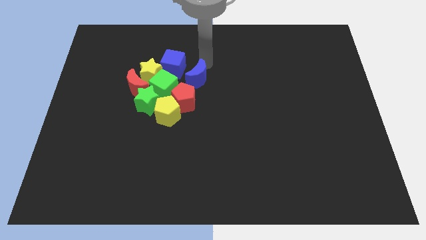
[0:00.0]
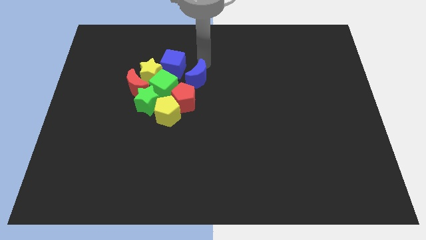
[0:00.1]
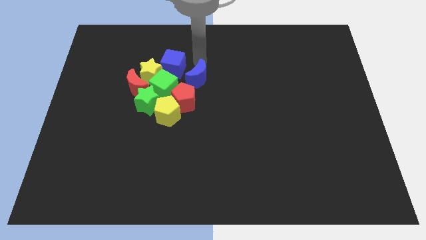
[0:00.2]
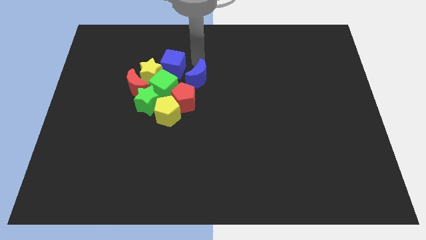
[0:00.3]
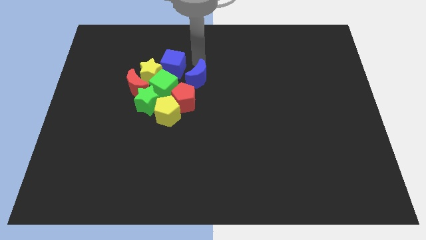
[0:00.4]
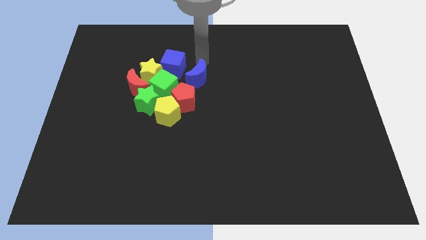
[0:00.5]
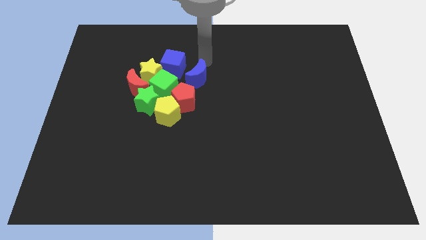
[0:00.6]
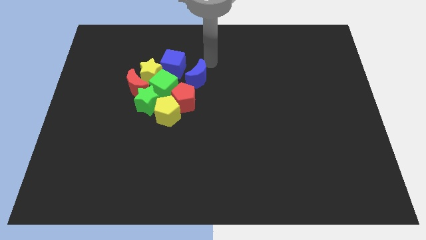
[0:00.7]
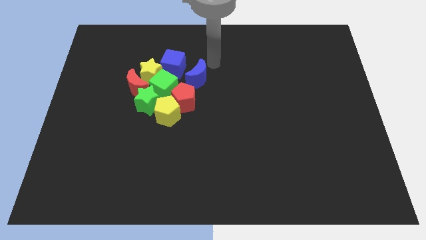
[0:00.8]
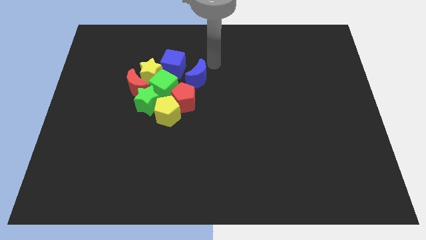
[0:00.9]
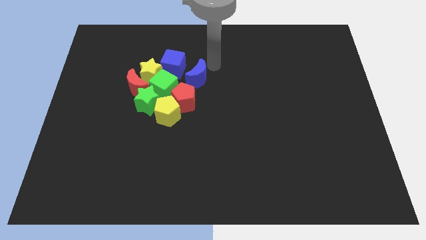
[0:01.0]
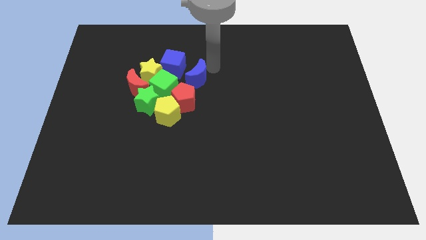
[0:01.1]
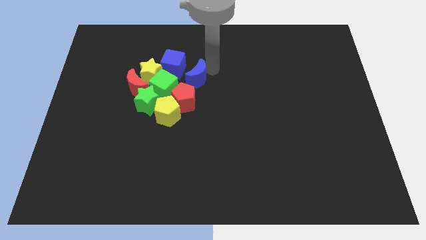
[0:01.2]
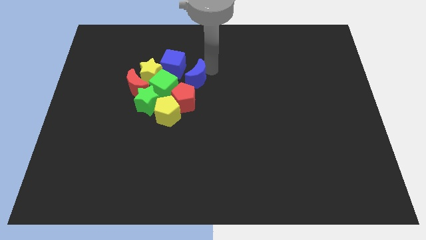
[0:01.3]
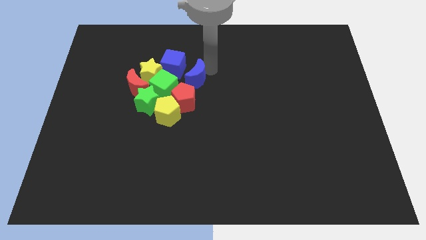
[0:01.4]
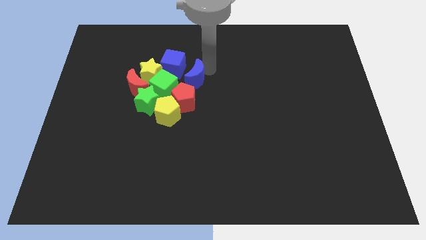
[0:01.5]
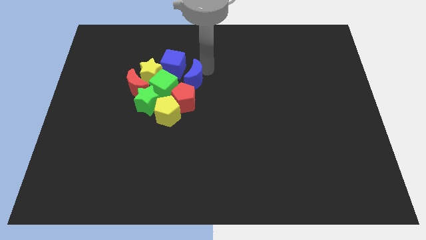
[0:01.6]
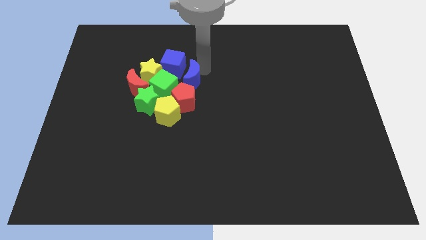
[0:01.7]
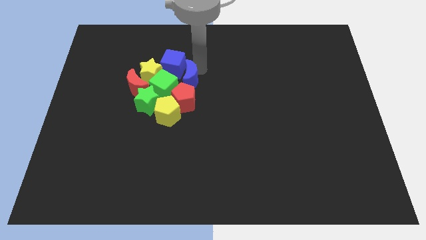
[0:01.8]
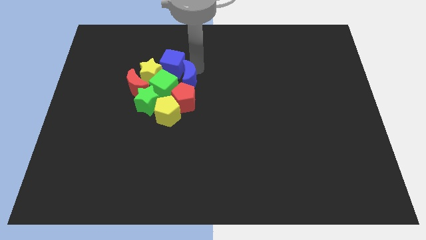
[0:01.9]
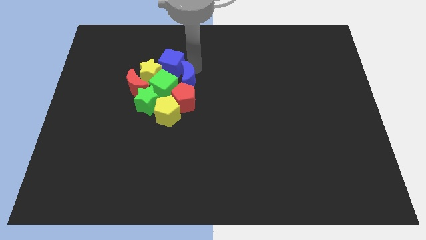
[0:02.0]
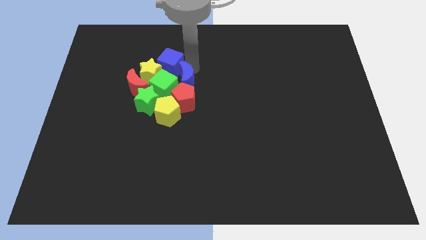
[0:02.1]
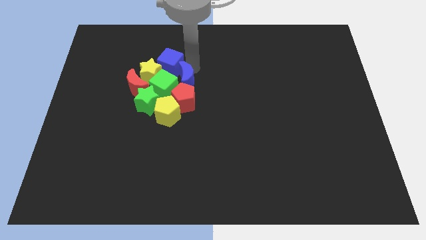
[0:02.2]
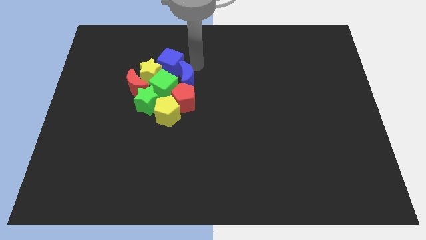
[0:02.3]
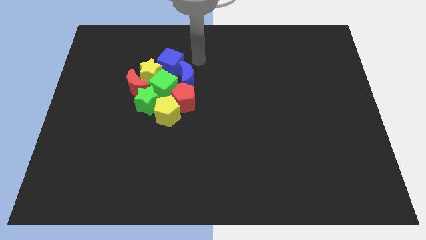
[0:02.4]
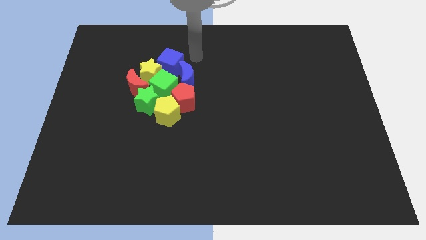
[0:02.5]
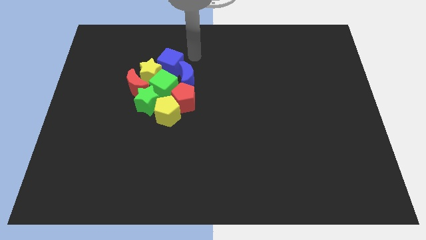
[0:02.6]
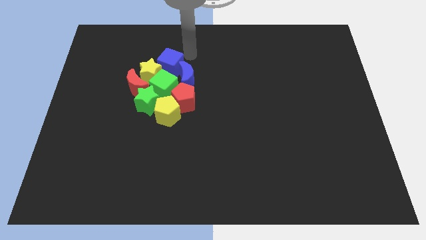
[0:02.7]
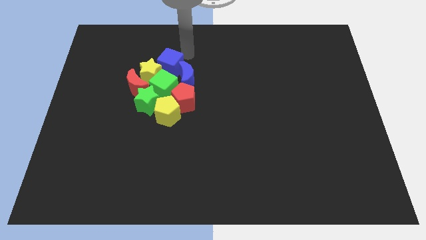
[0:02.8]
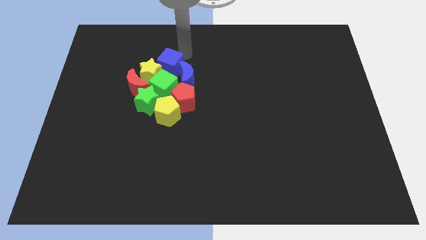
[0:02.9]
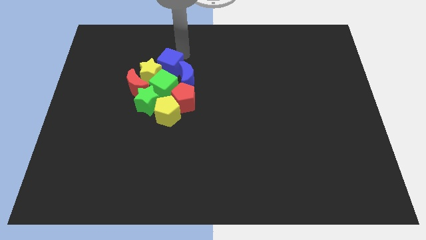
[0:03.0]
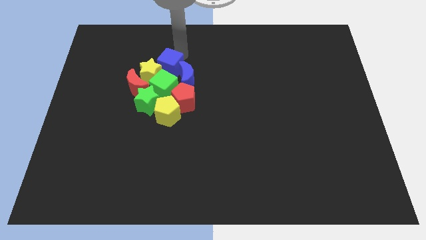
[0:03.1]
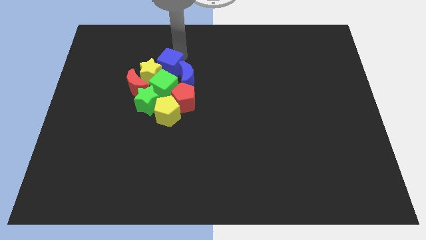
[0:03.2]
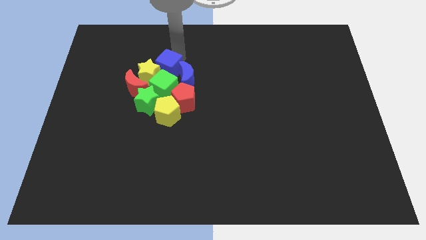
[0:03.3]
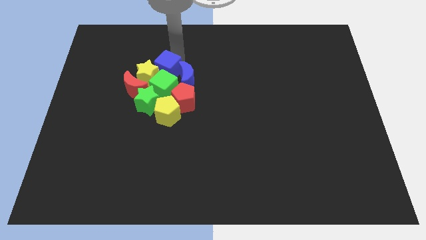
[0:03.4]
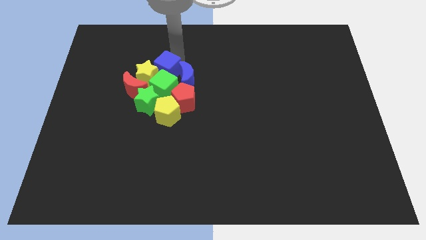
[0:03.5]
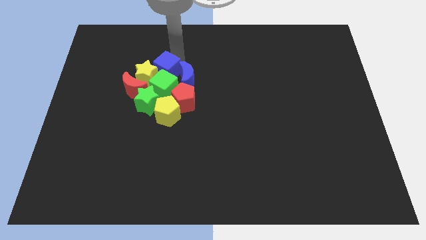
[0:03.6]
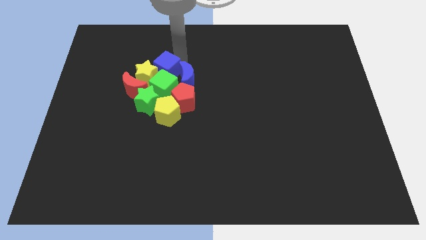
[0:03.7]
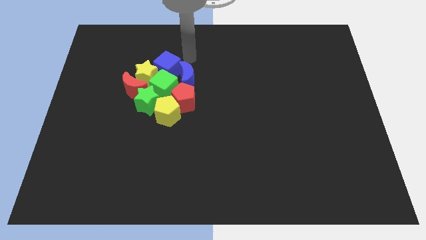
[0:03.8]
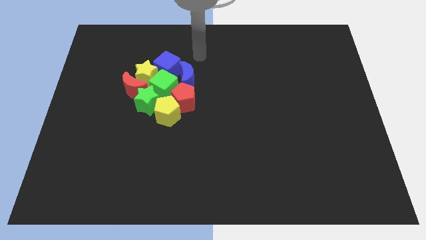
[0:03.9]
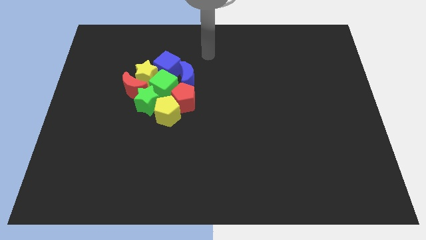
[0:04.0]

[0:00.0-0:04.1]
move blue crescent right to blue cube

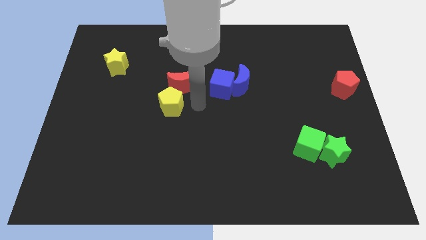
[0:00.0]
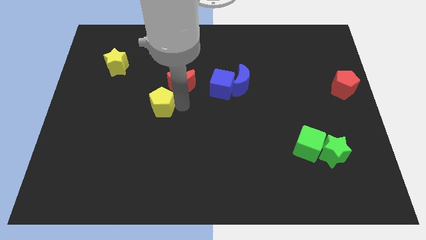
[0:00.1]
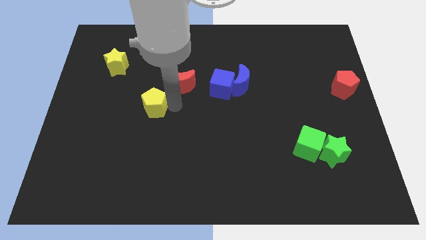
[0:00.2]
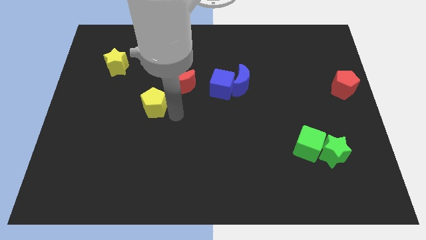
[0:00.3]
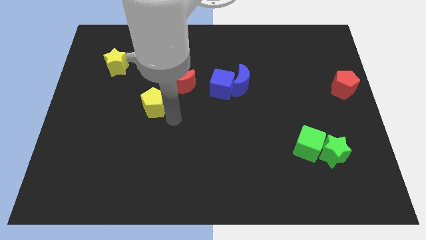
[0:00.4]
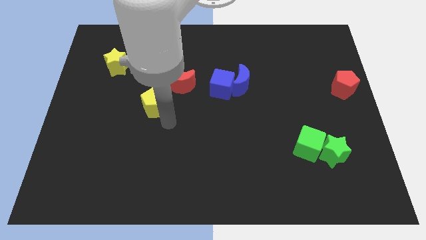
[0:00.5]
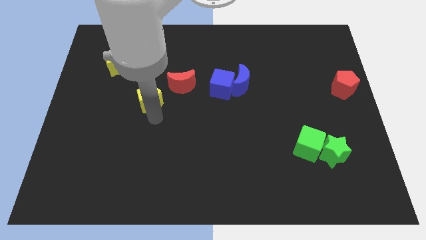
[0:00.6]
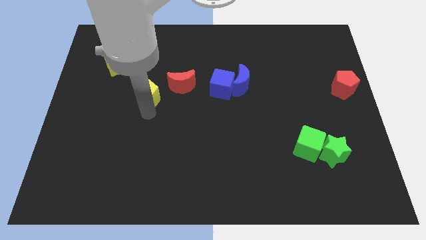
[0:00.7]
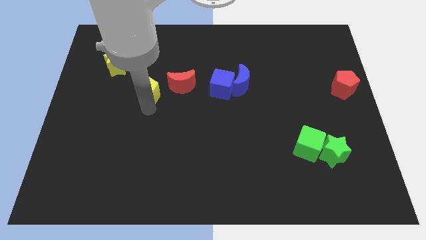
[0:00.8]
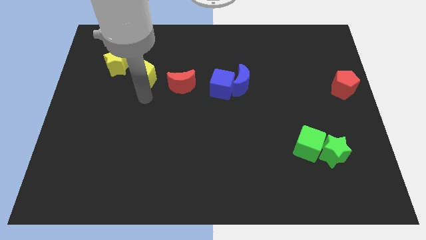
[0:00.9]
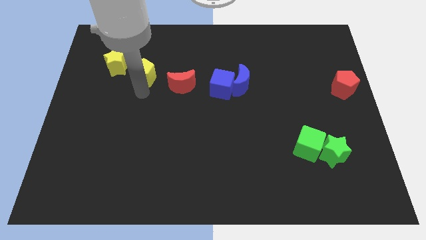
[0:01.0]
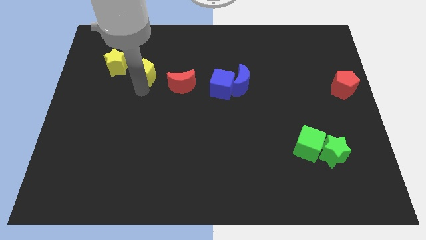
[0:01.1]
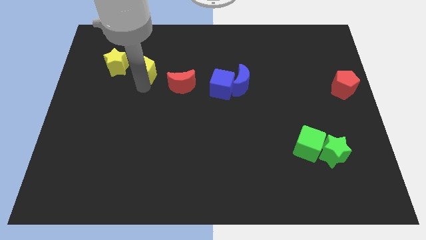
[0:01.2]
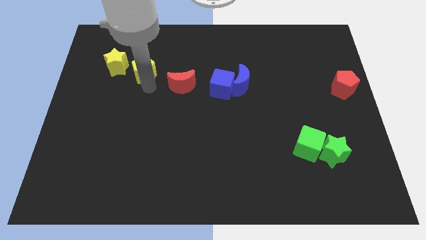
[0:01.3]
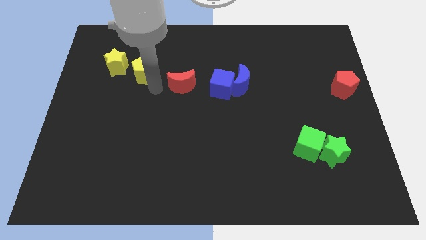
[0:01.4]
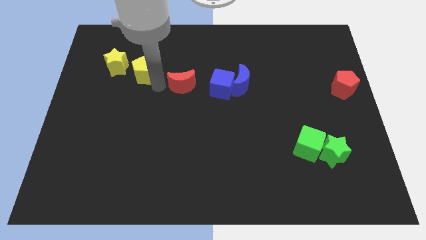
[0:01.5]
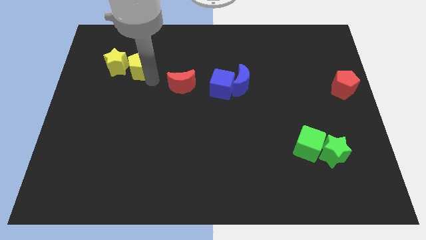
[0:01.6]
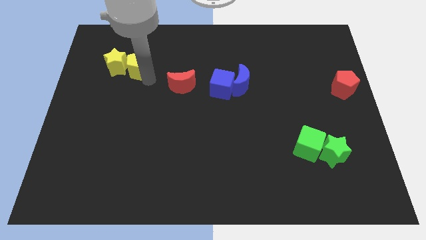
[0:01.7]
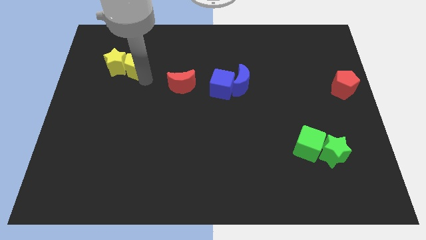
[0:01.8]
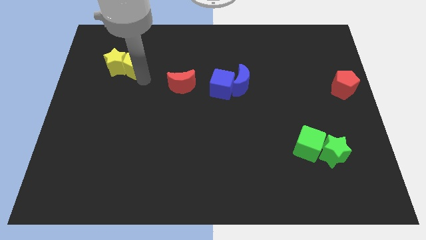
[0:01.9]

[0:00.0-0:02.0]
move the yellow pentagon to the right side of yellow star

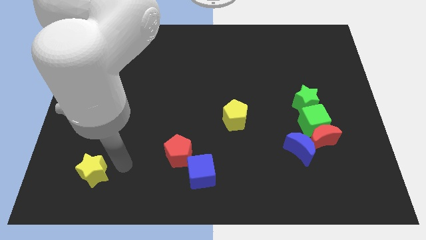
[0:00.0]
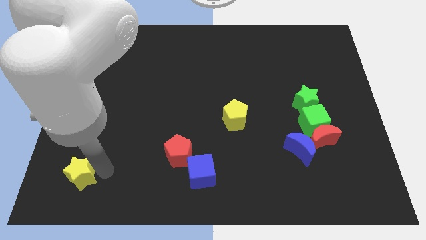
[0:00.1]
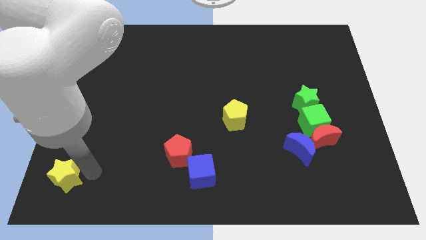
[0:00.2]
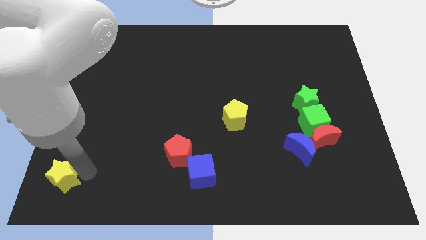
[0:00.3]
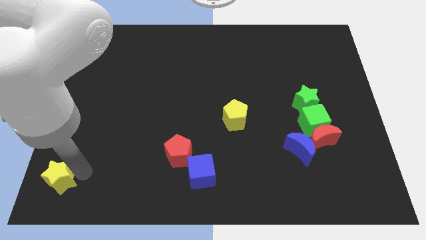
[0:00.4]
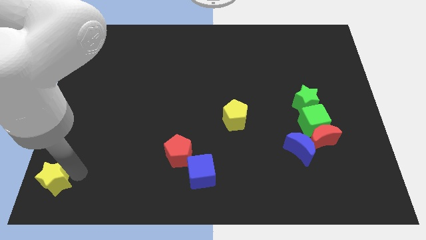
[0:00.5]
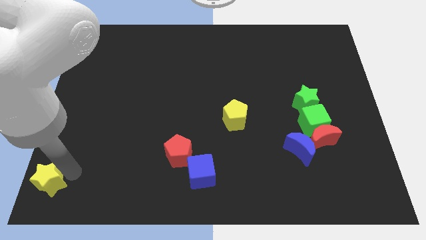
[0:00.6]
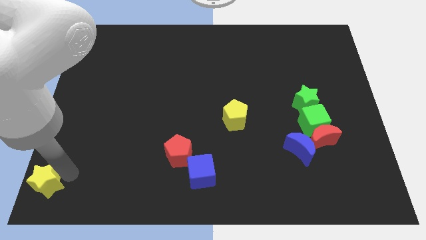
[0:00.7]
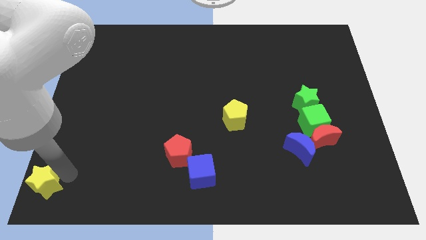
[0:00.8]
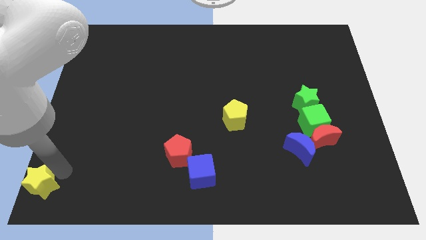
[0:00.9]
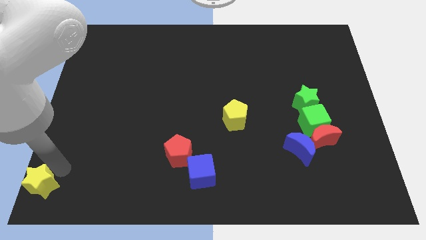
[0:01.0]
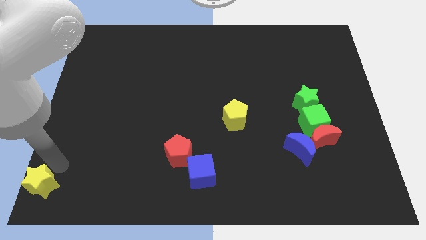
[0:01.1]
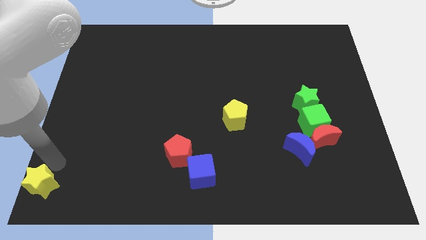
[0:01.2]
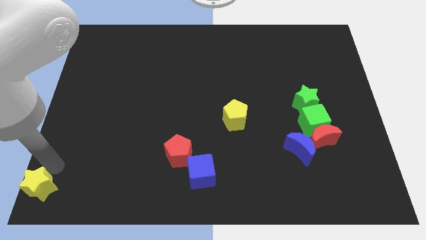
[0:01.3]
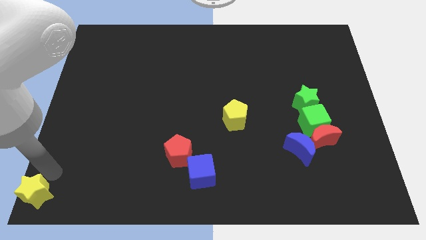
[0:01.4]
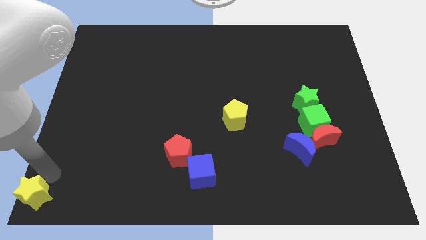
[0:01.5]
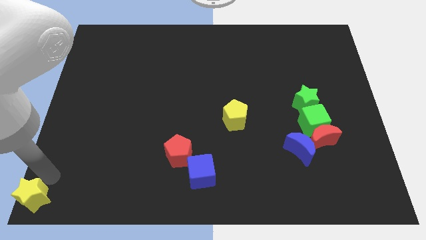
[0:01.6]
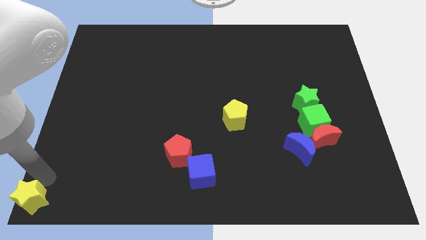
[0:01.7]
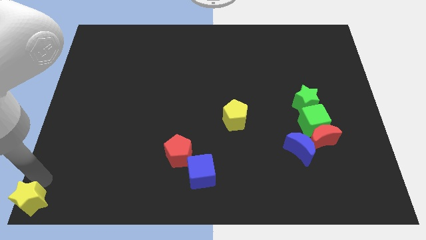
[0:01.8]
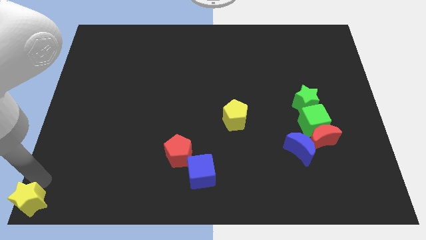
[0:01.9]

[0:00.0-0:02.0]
place the yellow star to the bottom left of the board

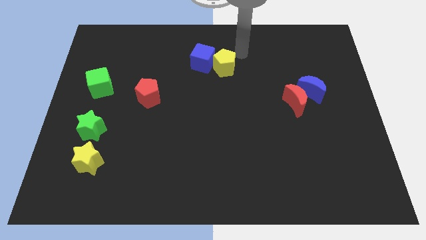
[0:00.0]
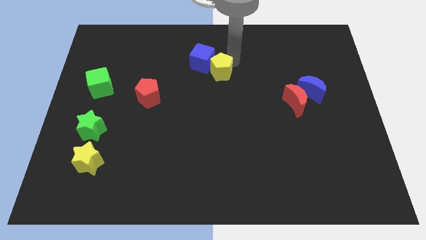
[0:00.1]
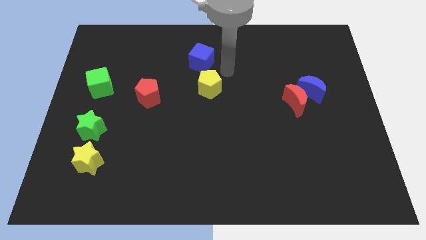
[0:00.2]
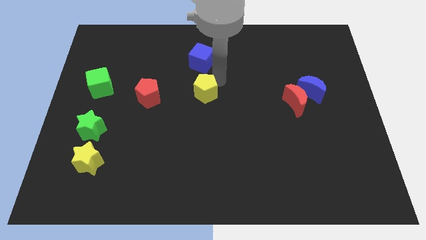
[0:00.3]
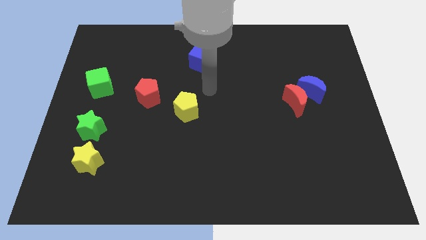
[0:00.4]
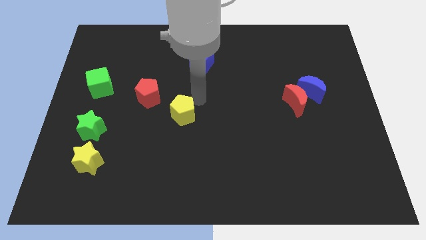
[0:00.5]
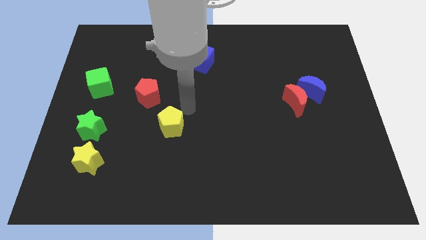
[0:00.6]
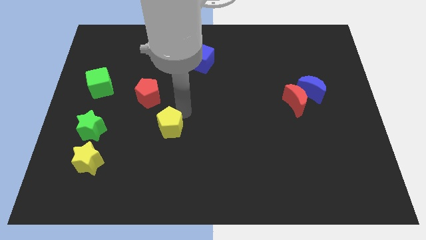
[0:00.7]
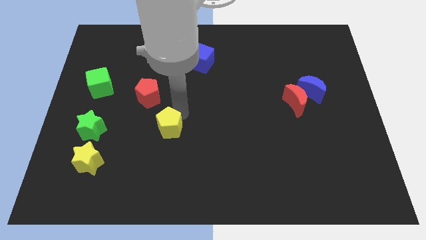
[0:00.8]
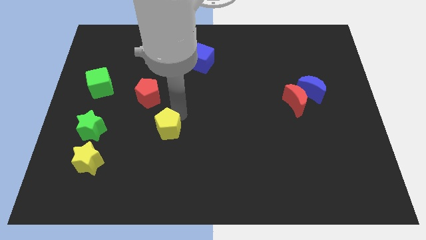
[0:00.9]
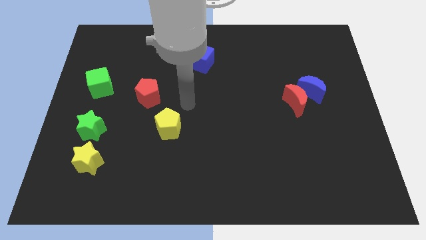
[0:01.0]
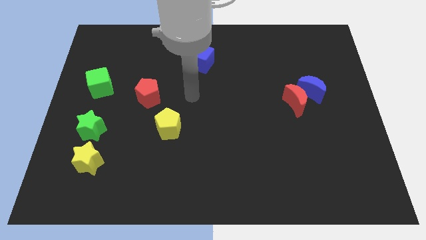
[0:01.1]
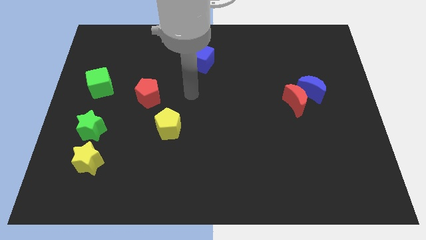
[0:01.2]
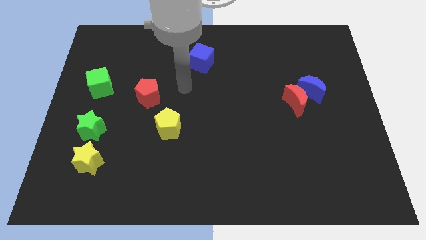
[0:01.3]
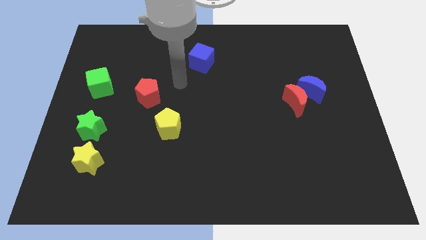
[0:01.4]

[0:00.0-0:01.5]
away the yellow pentagon from top side
